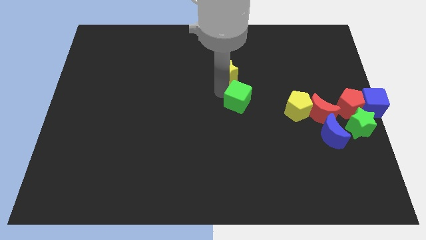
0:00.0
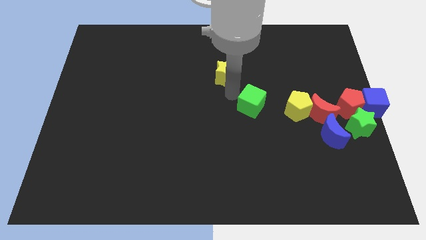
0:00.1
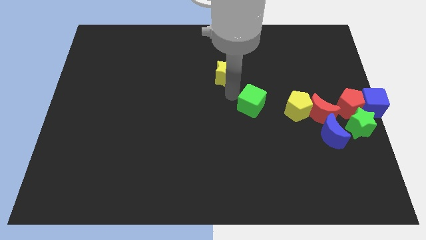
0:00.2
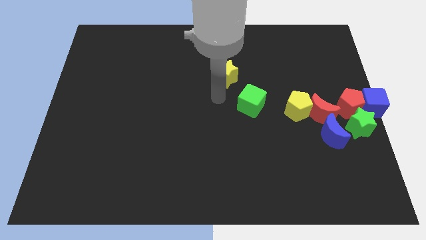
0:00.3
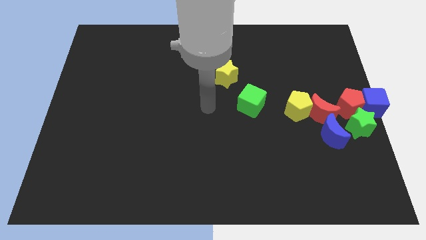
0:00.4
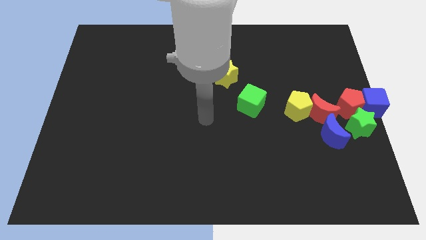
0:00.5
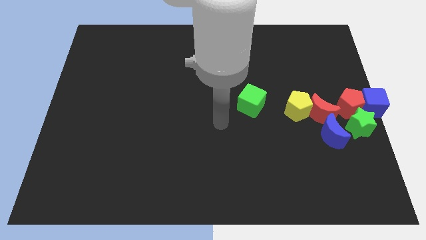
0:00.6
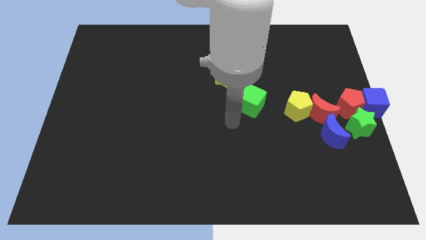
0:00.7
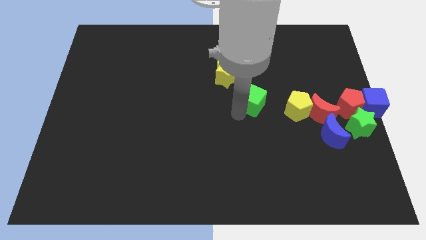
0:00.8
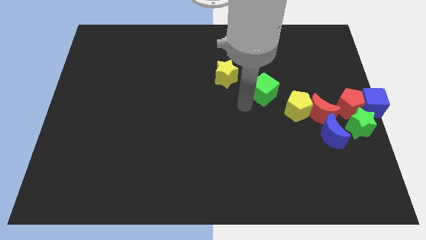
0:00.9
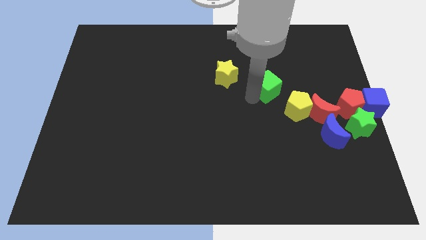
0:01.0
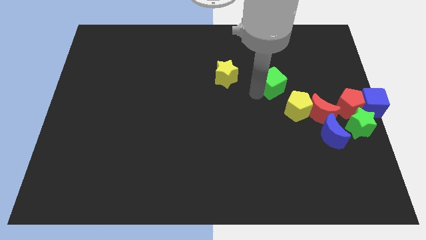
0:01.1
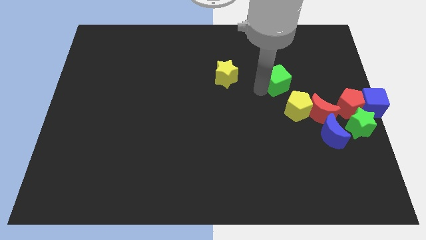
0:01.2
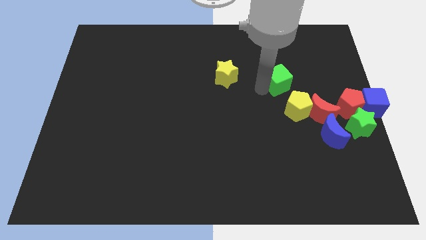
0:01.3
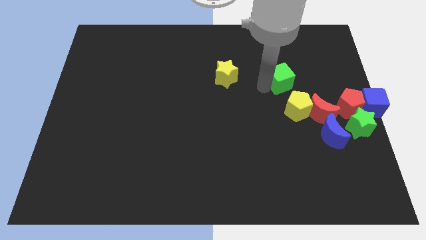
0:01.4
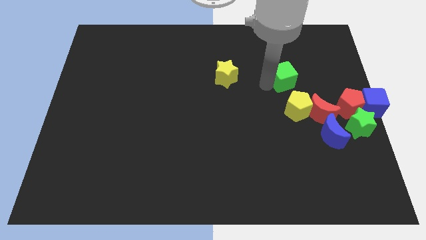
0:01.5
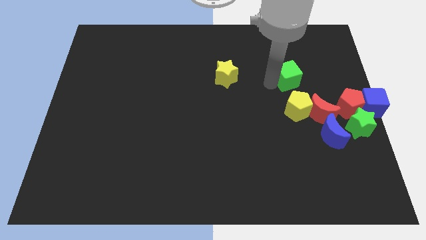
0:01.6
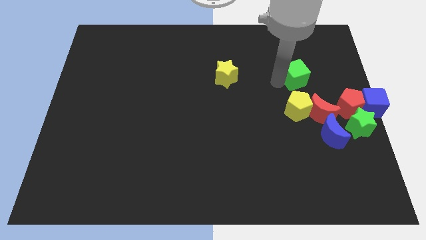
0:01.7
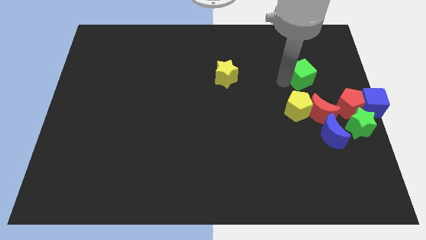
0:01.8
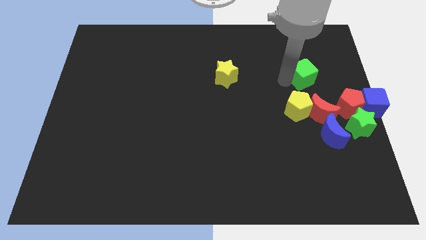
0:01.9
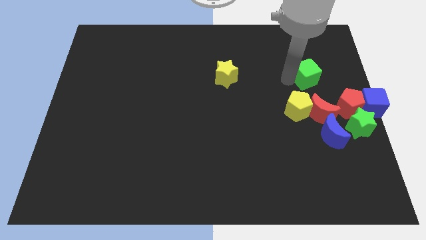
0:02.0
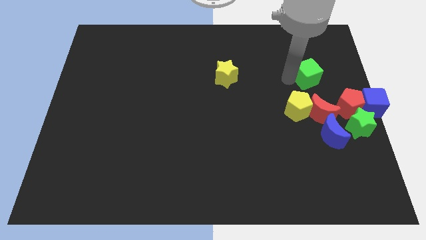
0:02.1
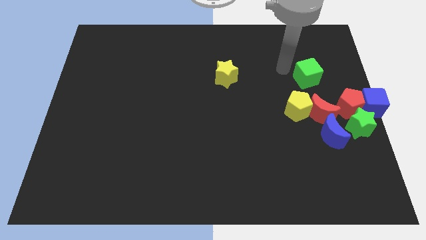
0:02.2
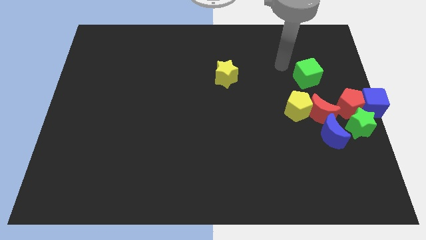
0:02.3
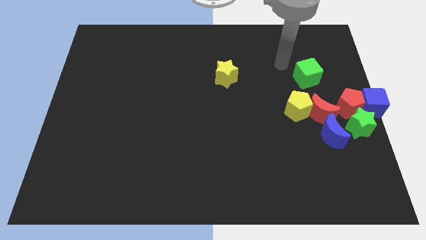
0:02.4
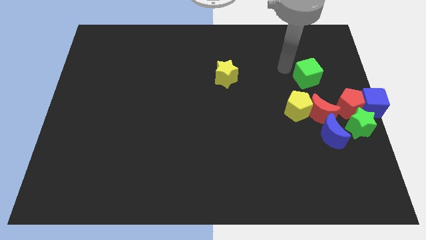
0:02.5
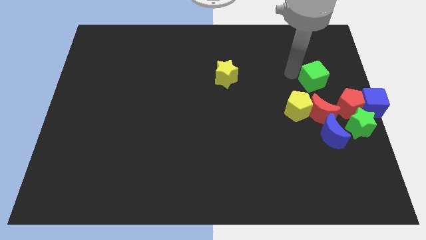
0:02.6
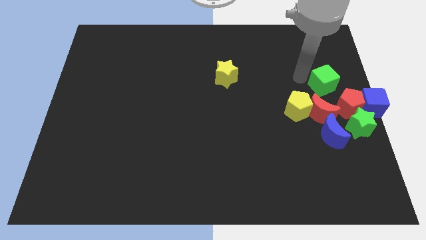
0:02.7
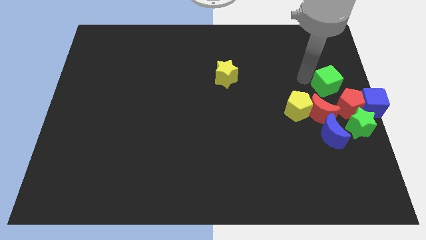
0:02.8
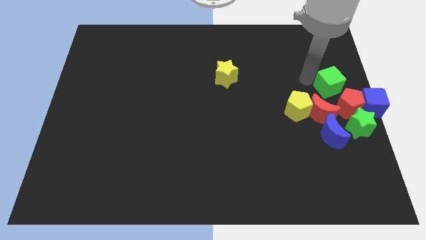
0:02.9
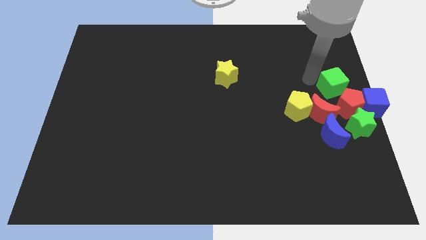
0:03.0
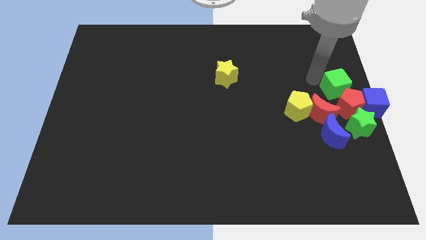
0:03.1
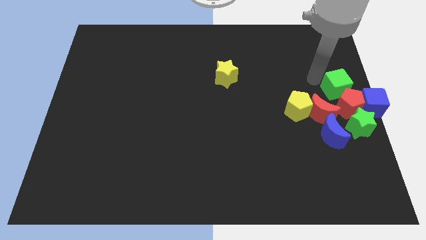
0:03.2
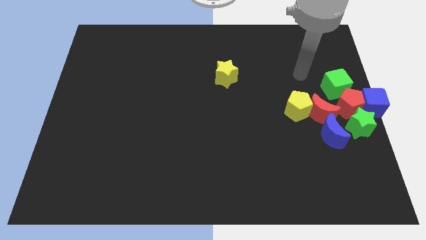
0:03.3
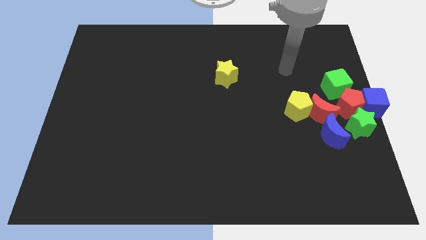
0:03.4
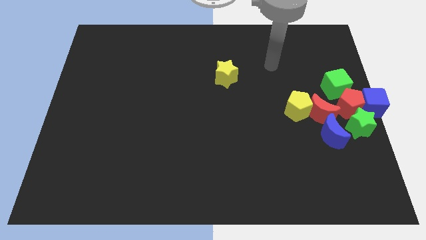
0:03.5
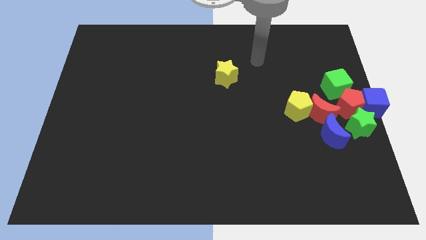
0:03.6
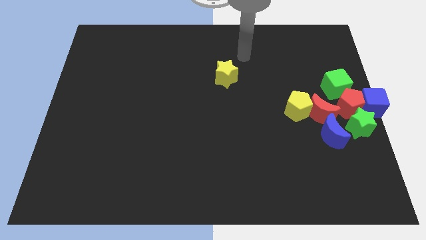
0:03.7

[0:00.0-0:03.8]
push the green cube above the red pentagon

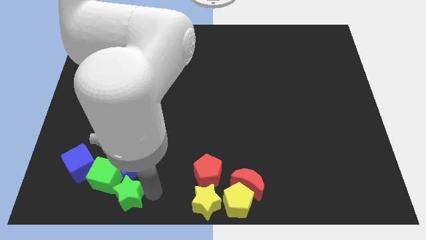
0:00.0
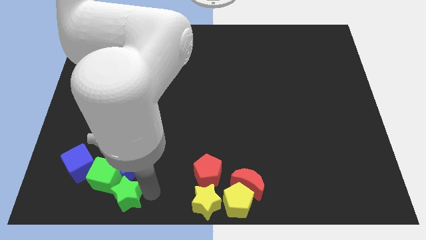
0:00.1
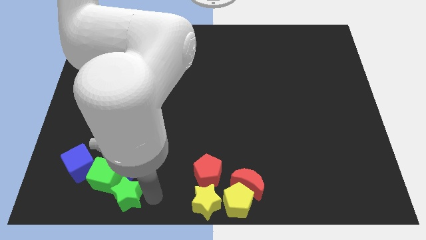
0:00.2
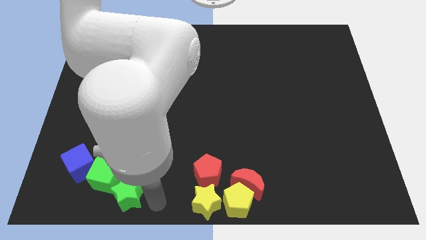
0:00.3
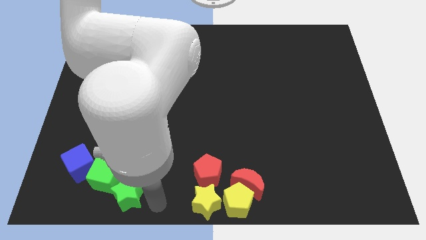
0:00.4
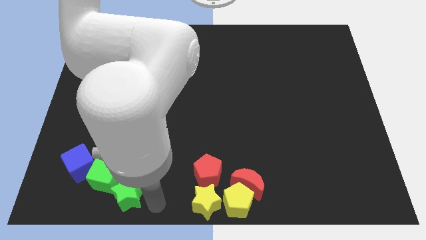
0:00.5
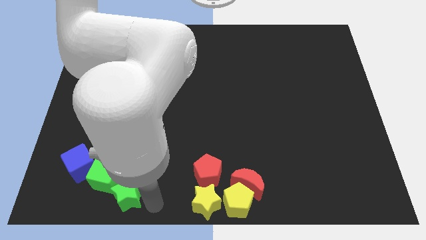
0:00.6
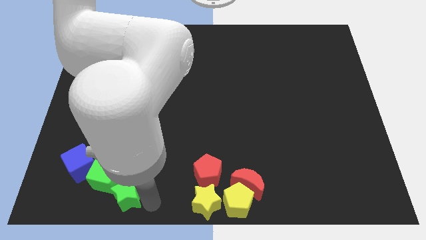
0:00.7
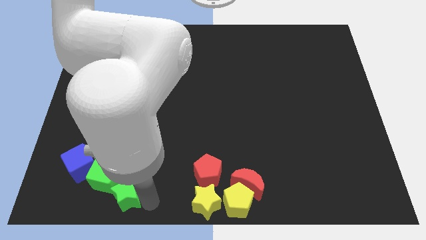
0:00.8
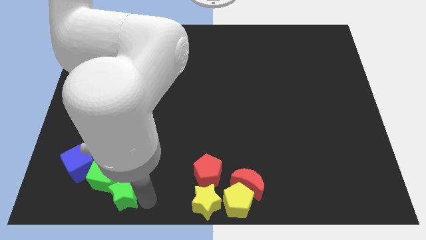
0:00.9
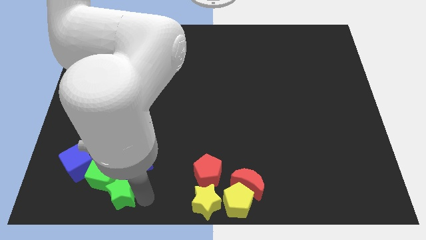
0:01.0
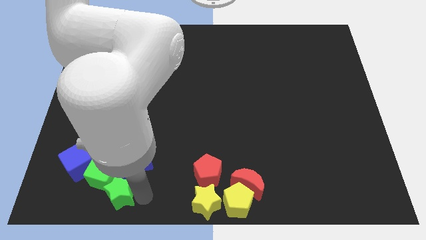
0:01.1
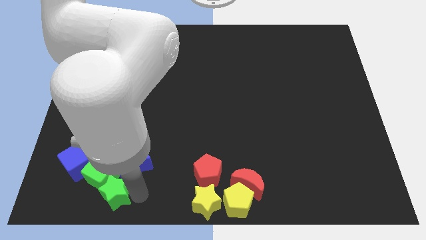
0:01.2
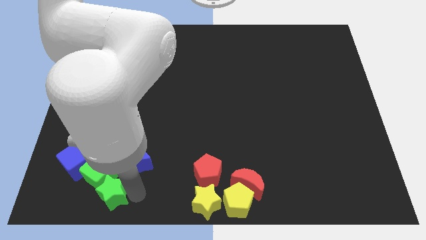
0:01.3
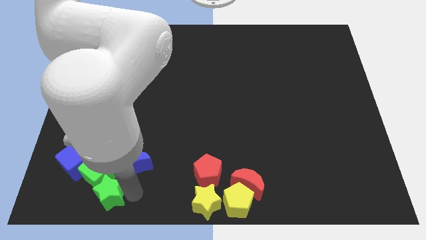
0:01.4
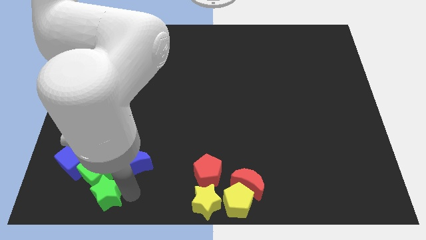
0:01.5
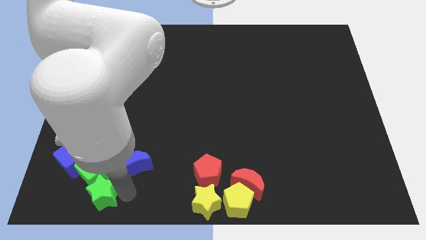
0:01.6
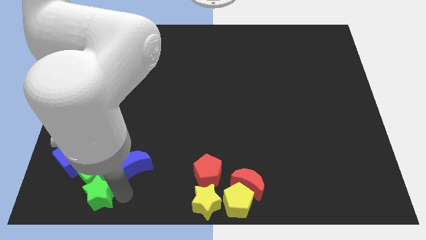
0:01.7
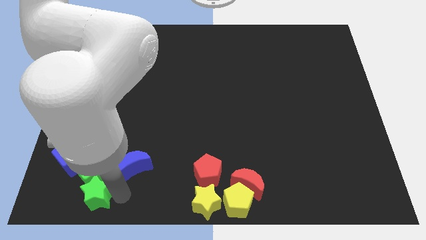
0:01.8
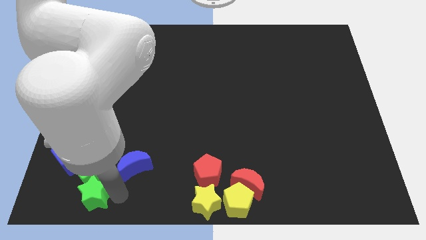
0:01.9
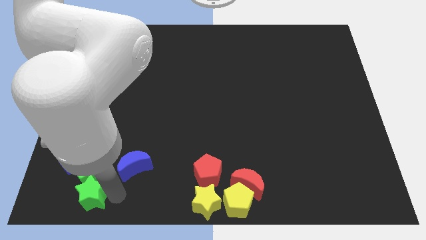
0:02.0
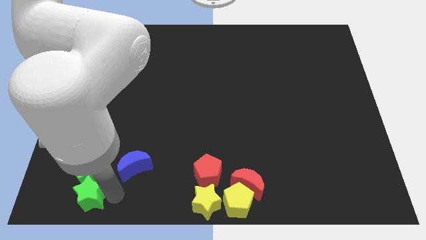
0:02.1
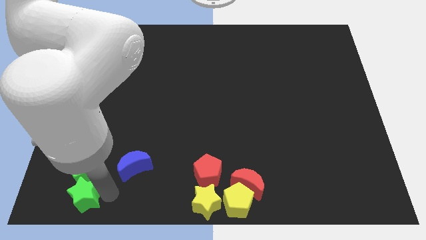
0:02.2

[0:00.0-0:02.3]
separate the group of green blocks and blue cube away from the blue moon

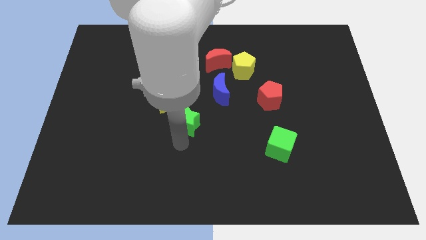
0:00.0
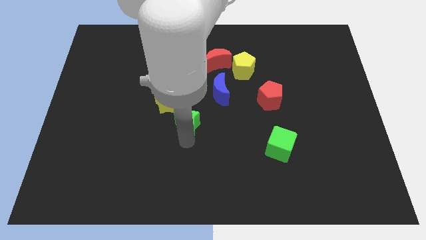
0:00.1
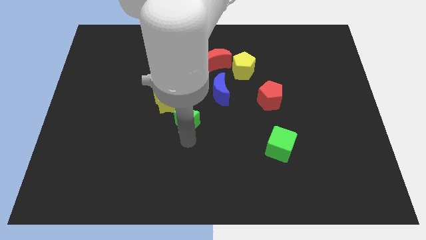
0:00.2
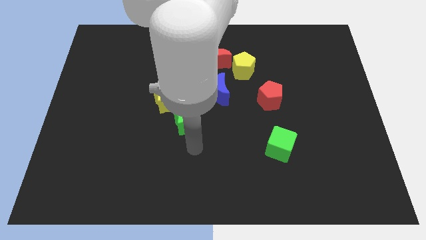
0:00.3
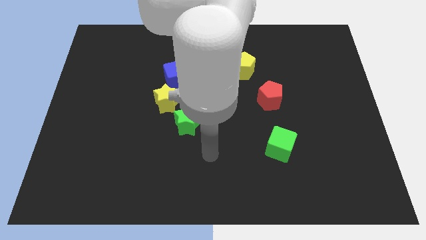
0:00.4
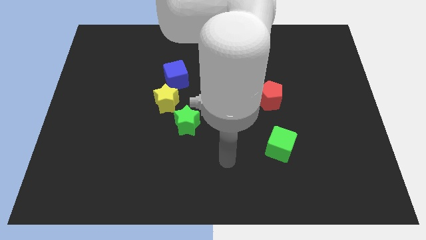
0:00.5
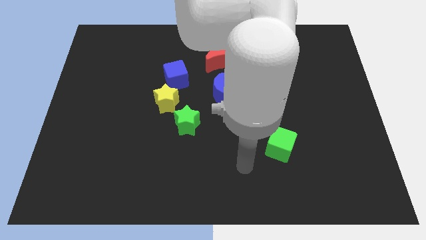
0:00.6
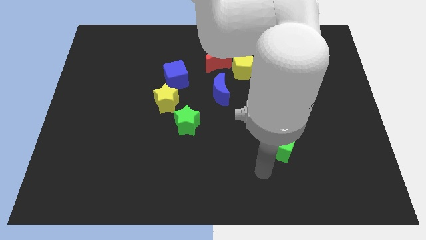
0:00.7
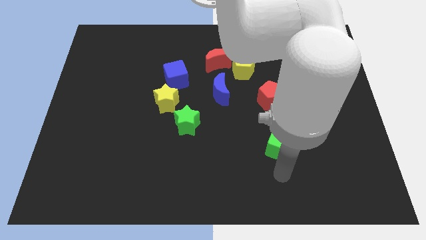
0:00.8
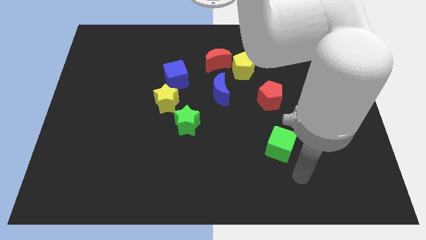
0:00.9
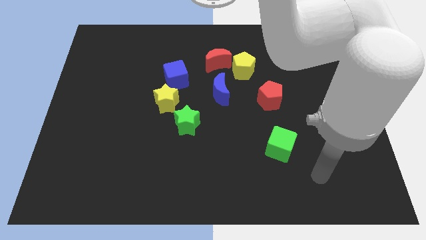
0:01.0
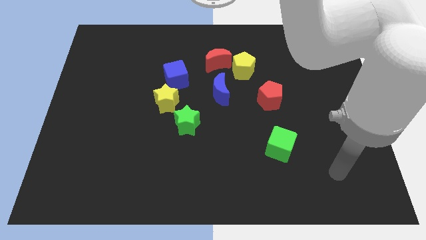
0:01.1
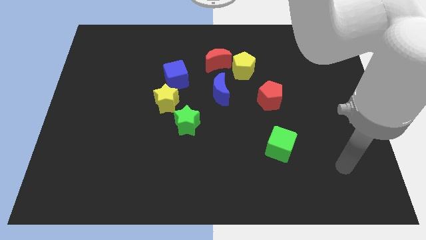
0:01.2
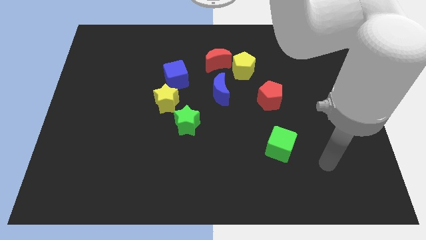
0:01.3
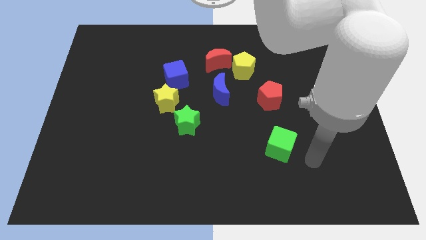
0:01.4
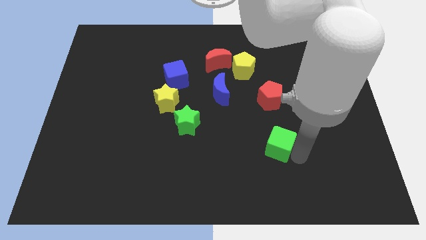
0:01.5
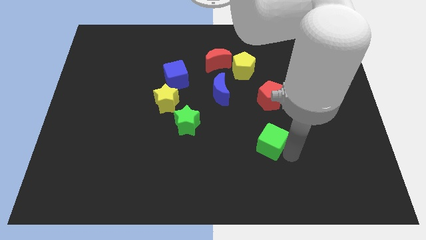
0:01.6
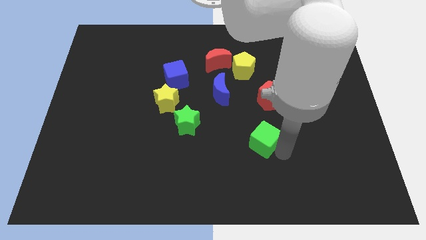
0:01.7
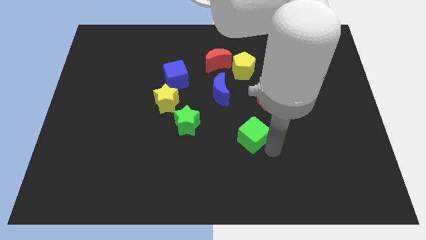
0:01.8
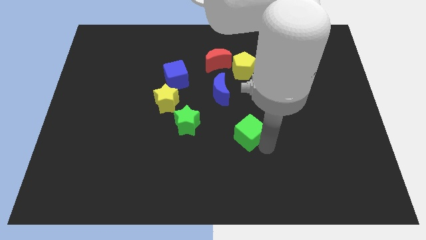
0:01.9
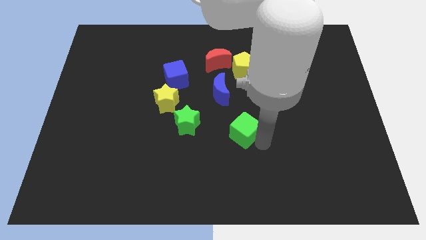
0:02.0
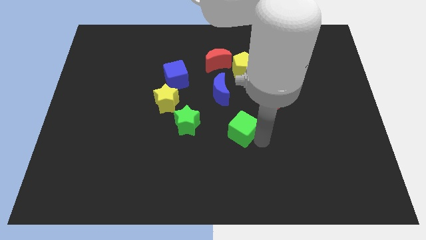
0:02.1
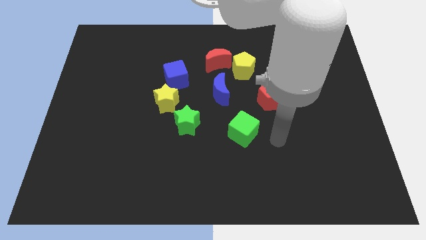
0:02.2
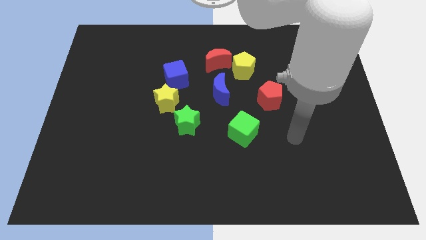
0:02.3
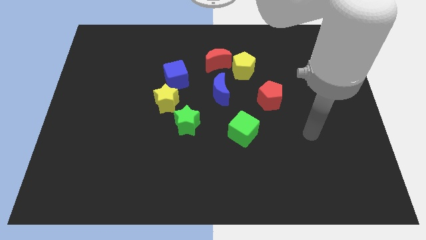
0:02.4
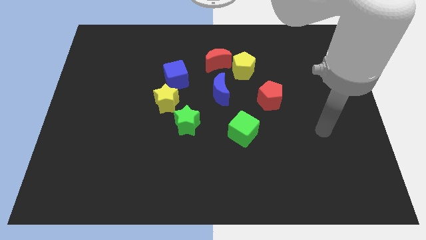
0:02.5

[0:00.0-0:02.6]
place green cube below yellow pentagon

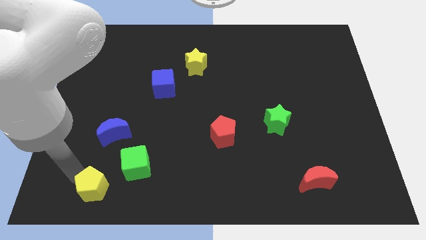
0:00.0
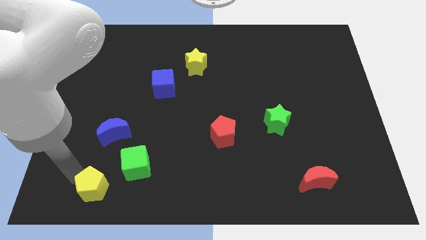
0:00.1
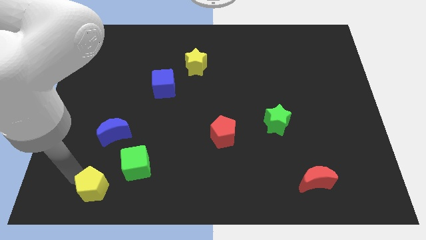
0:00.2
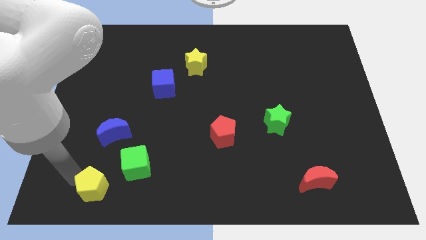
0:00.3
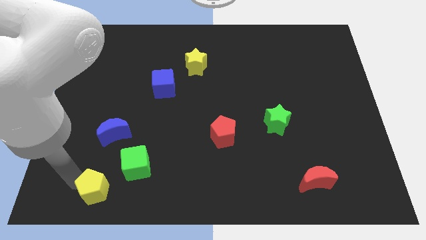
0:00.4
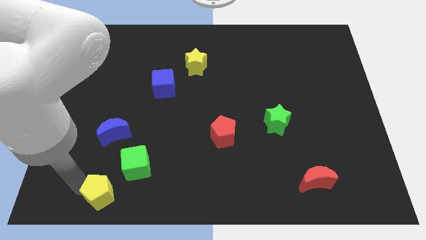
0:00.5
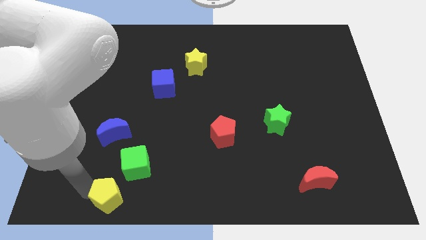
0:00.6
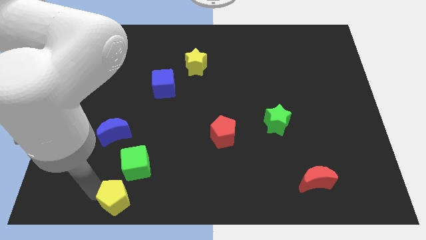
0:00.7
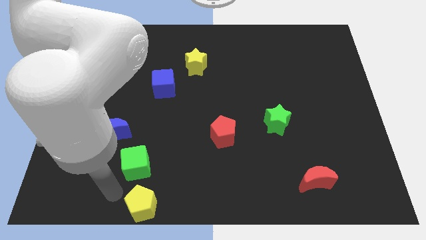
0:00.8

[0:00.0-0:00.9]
push the yellow pentagon to the bottom of the green cube
